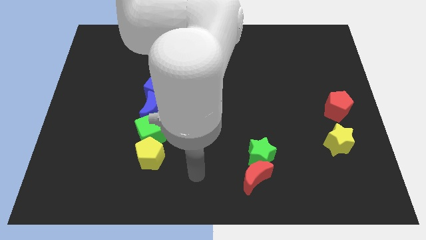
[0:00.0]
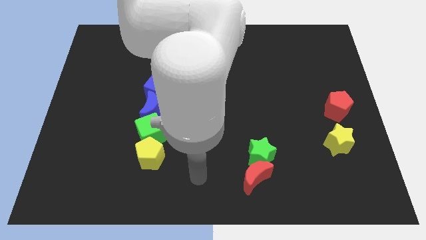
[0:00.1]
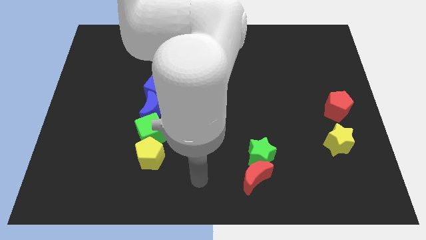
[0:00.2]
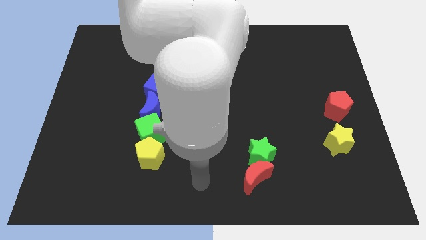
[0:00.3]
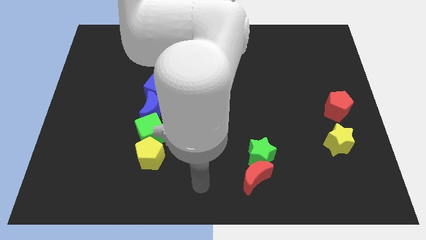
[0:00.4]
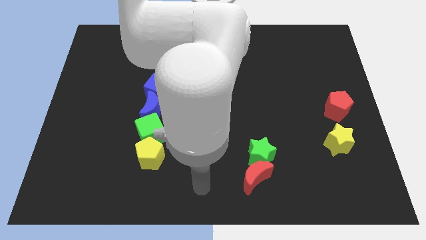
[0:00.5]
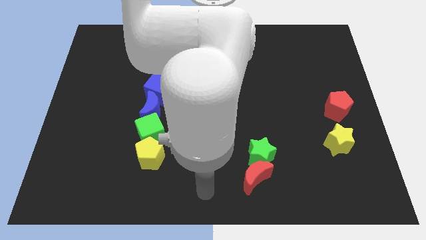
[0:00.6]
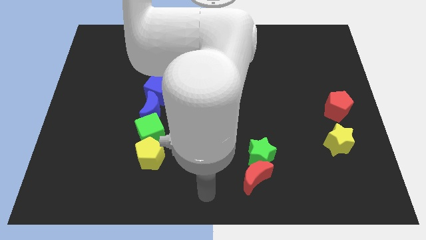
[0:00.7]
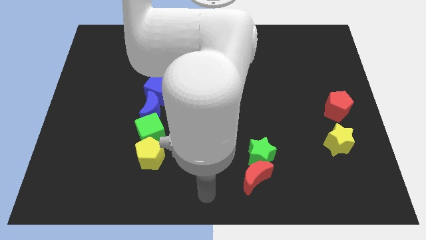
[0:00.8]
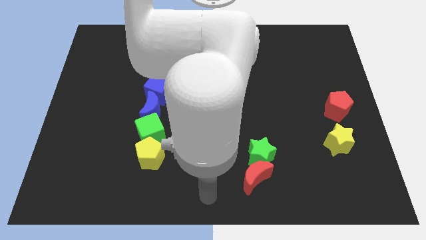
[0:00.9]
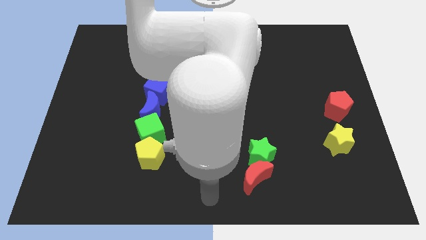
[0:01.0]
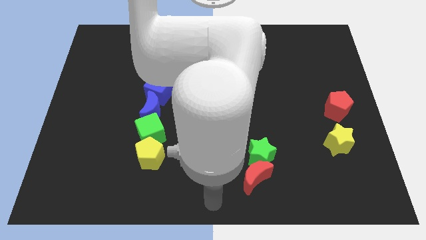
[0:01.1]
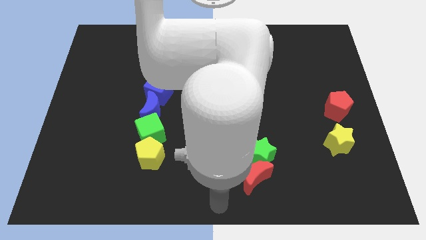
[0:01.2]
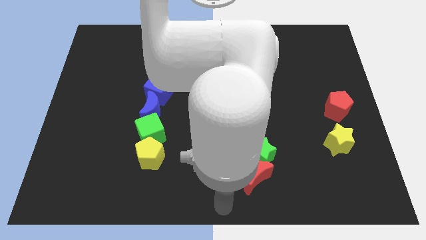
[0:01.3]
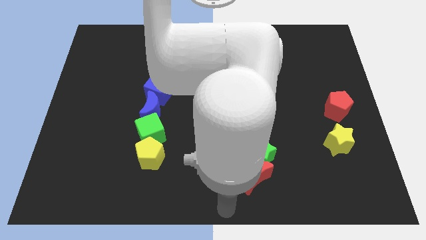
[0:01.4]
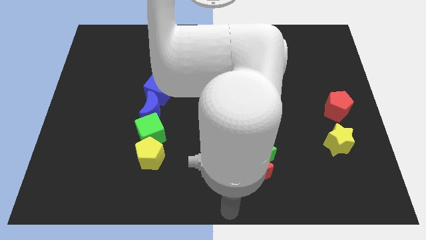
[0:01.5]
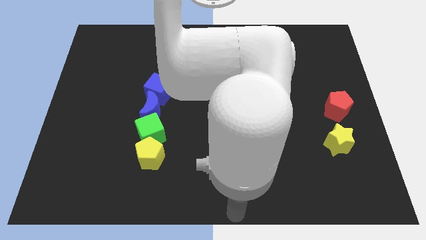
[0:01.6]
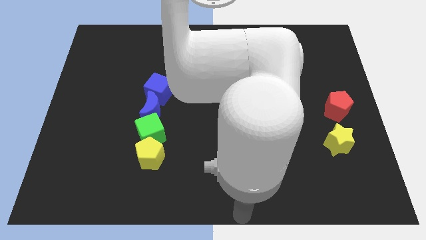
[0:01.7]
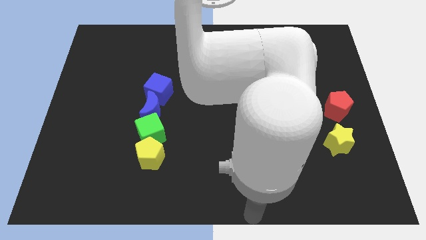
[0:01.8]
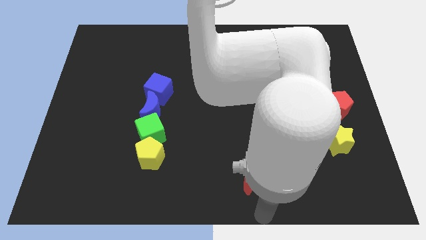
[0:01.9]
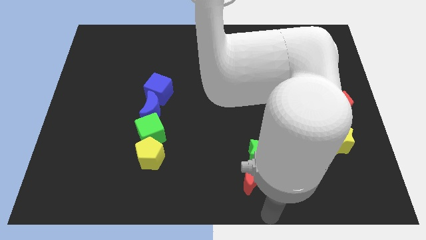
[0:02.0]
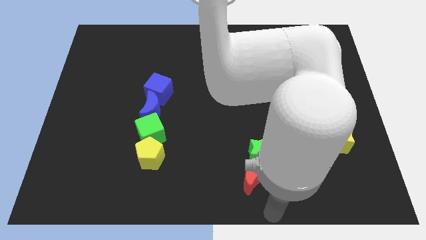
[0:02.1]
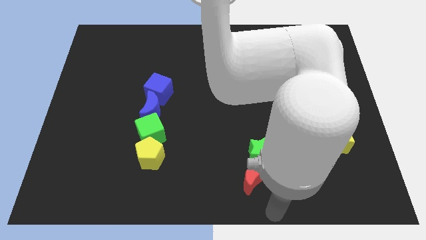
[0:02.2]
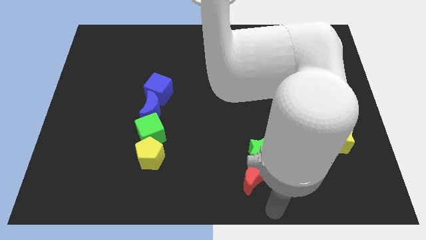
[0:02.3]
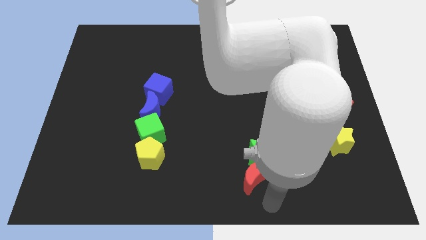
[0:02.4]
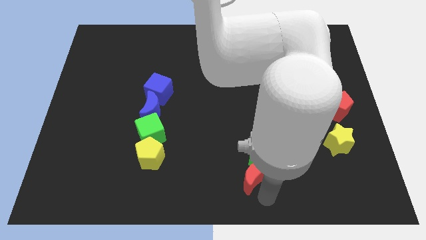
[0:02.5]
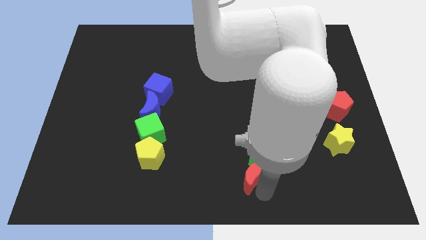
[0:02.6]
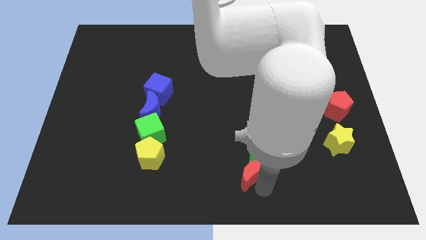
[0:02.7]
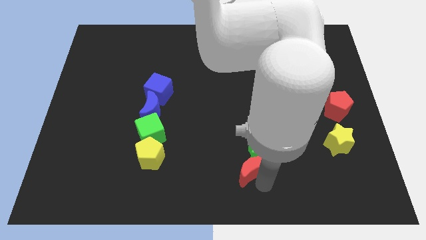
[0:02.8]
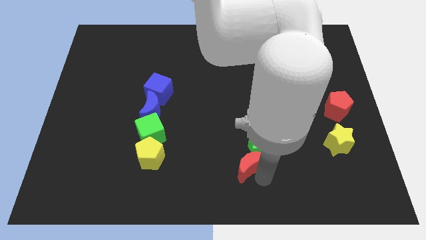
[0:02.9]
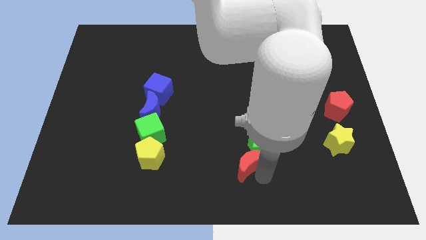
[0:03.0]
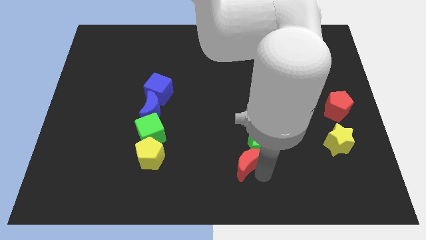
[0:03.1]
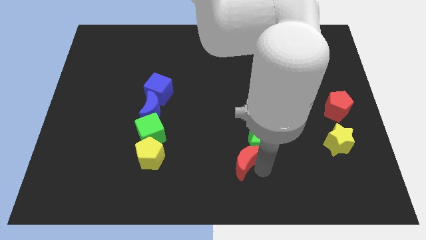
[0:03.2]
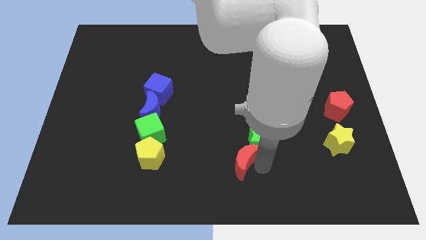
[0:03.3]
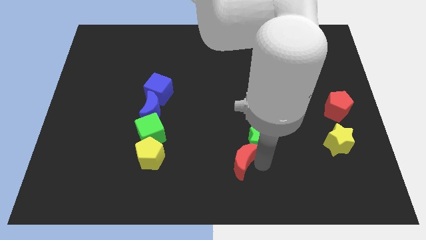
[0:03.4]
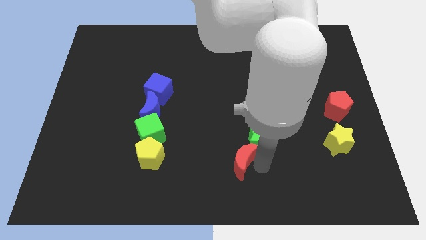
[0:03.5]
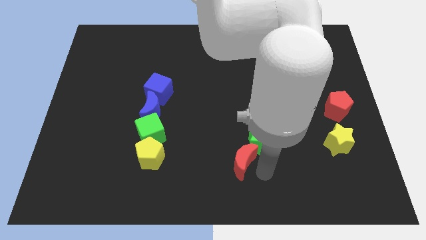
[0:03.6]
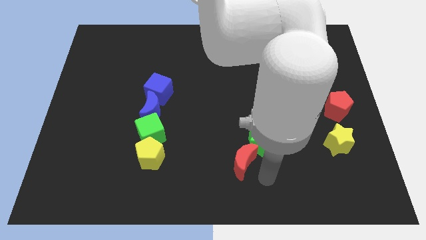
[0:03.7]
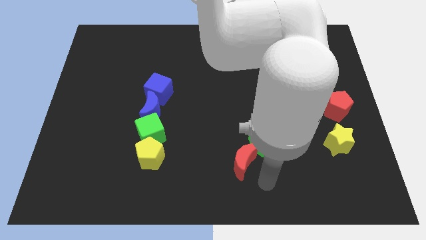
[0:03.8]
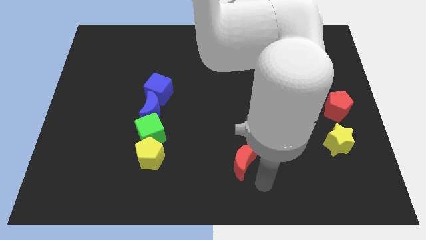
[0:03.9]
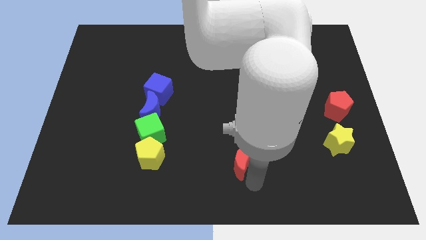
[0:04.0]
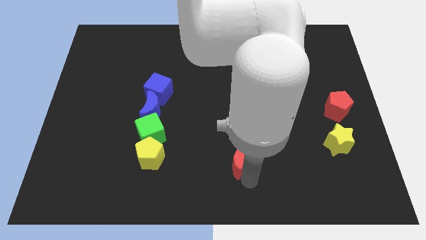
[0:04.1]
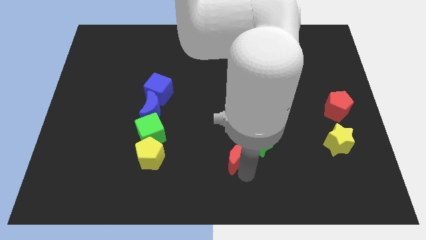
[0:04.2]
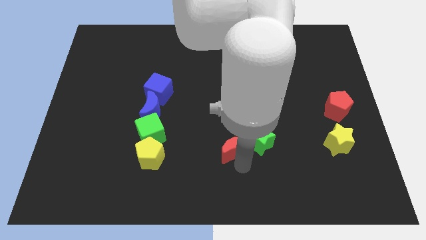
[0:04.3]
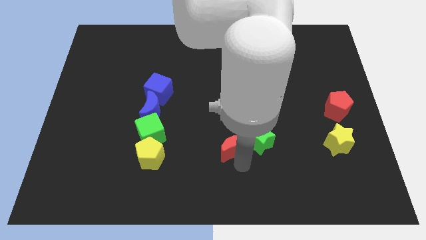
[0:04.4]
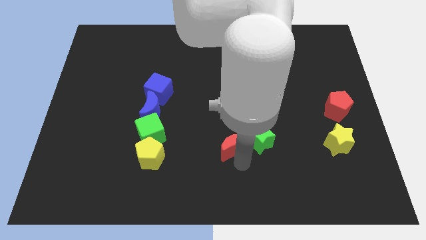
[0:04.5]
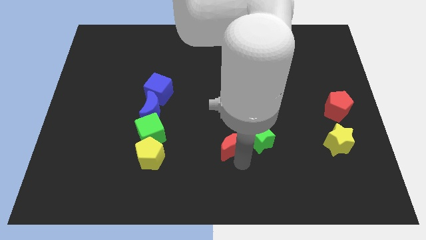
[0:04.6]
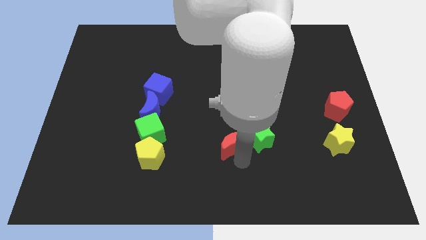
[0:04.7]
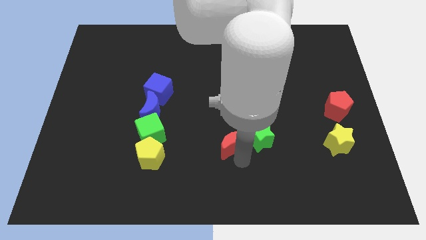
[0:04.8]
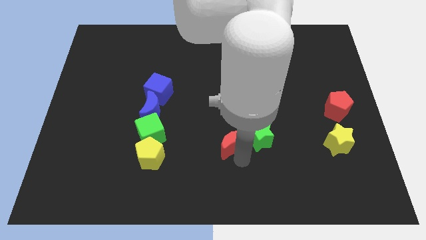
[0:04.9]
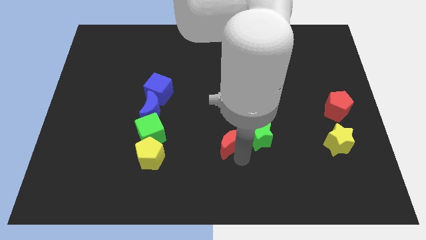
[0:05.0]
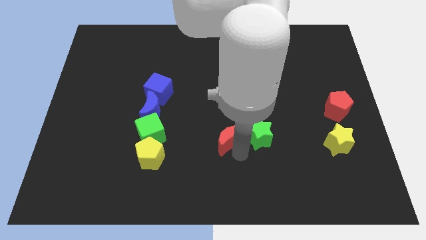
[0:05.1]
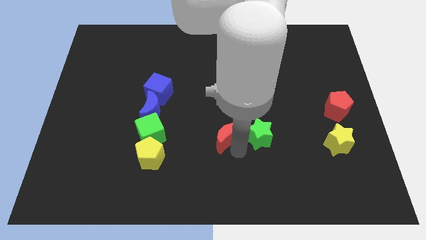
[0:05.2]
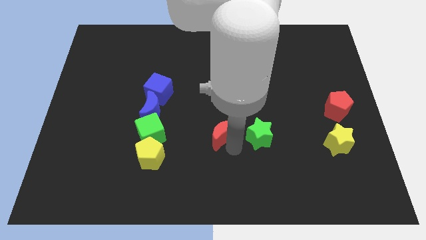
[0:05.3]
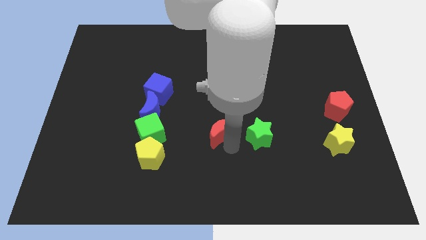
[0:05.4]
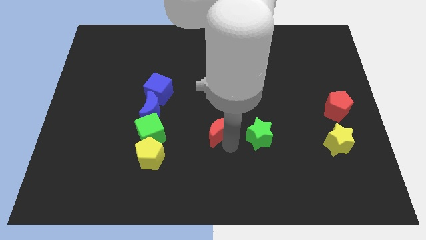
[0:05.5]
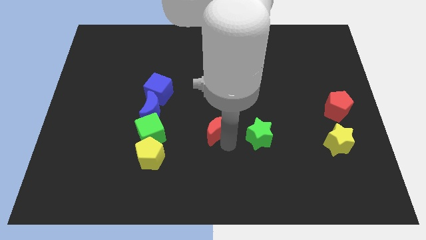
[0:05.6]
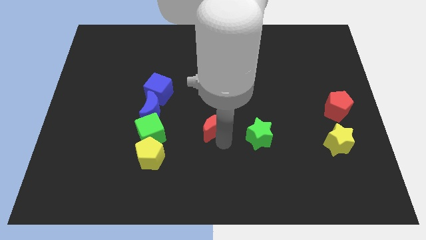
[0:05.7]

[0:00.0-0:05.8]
separate the red crescent and the green star

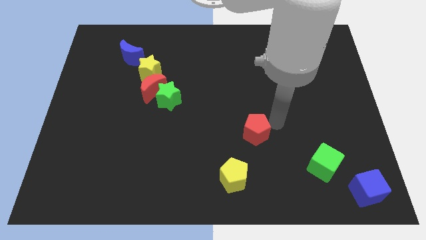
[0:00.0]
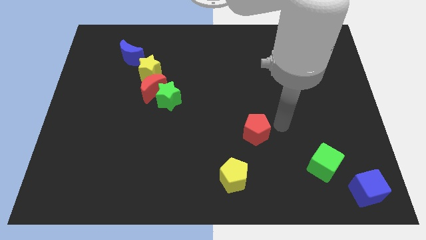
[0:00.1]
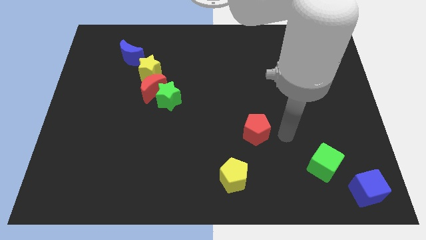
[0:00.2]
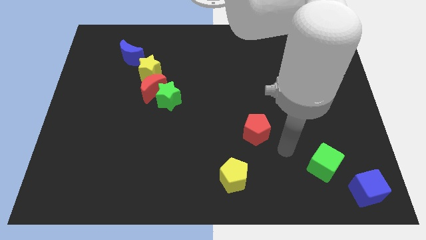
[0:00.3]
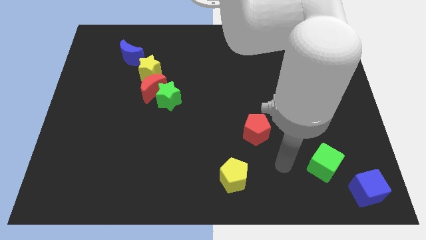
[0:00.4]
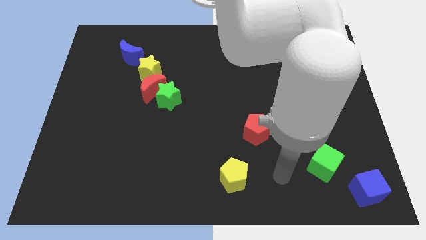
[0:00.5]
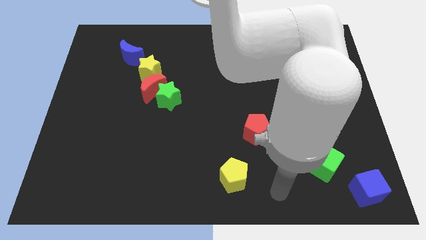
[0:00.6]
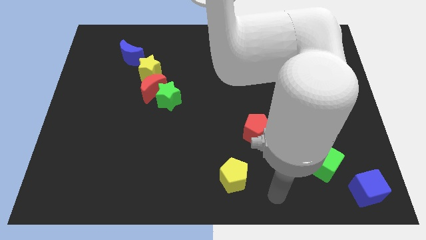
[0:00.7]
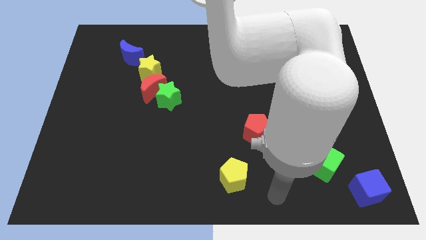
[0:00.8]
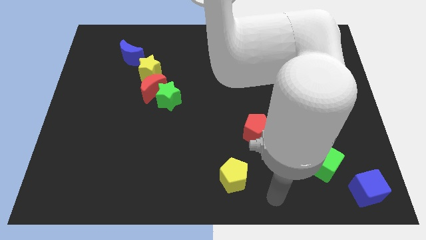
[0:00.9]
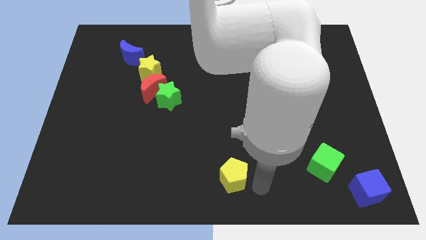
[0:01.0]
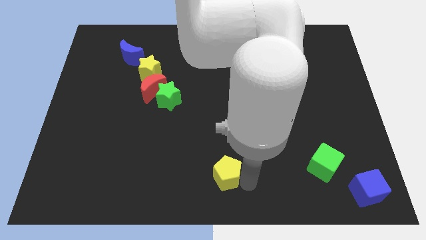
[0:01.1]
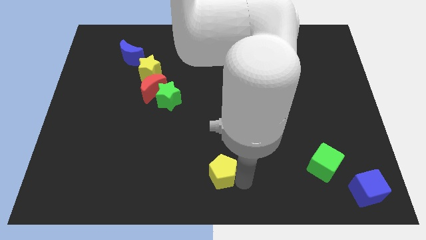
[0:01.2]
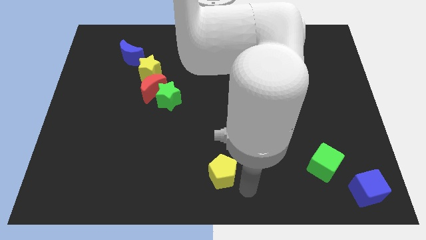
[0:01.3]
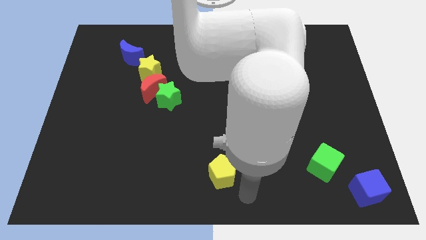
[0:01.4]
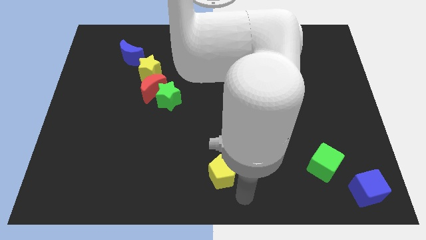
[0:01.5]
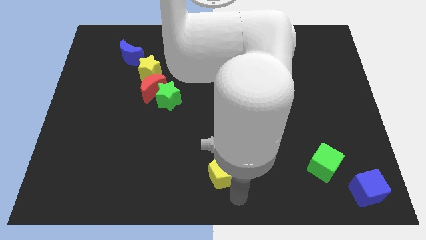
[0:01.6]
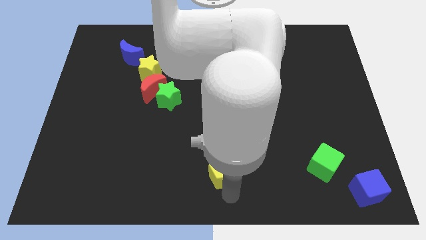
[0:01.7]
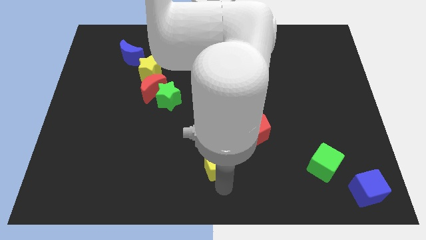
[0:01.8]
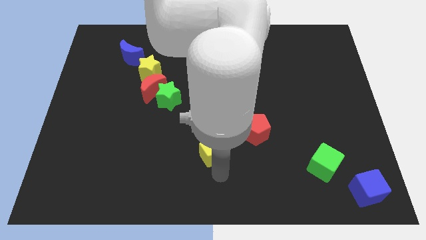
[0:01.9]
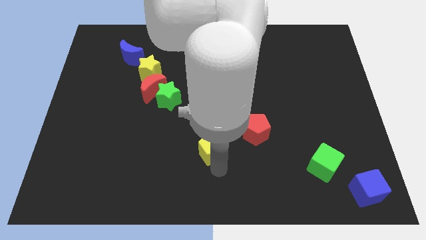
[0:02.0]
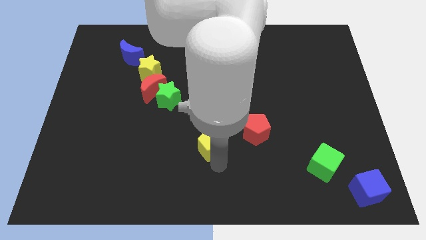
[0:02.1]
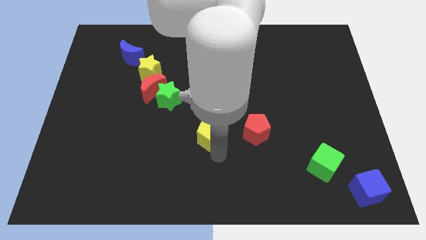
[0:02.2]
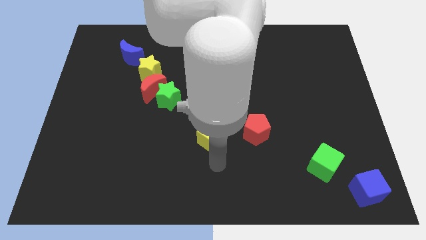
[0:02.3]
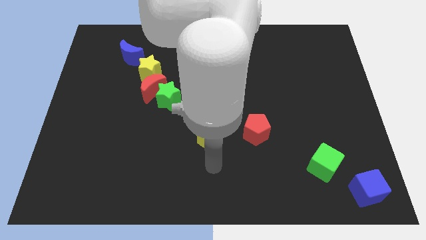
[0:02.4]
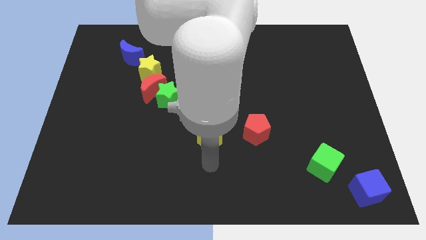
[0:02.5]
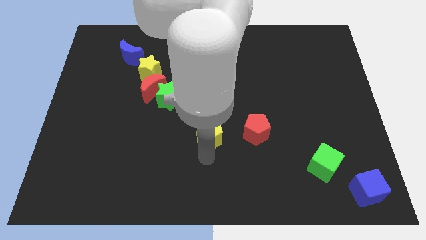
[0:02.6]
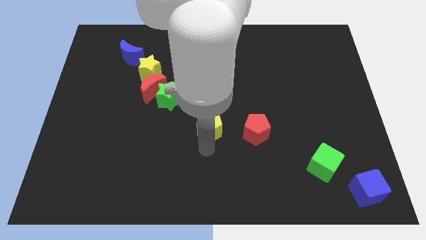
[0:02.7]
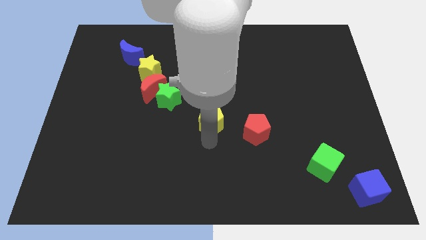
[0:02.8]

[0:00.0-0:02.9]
place the yellow pentagon left to the red pentagon

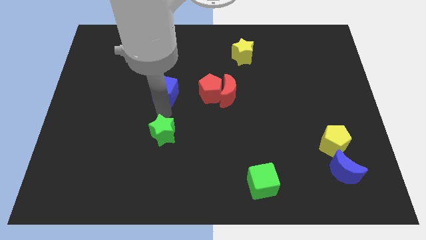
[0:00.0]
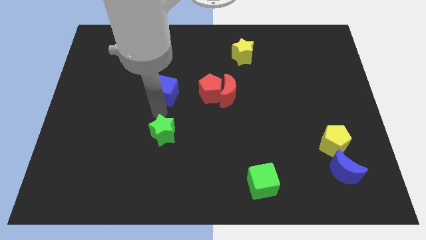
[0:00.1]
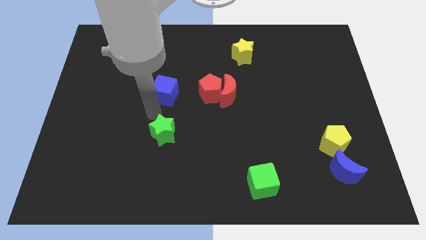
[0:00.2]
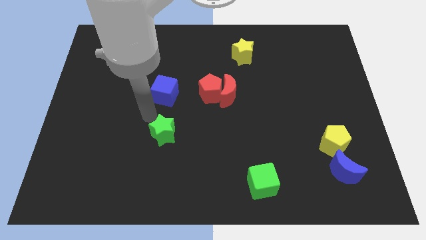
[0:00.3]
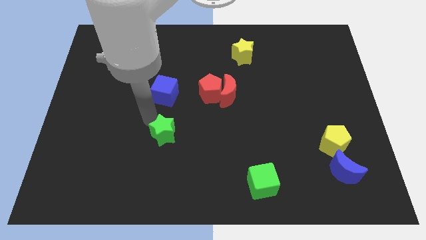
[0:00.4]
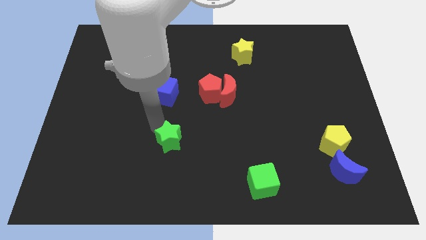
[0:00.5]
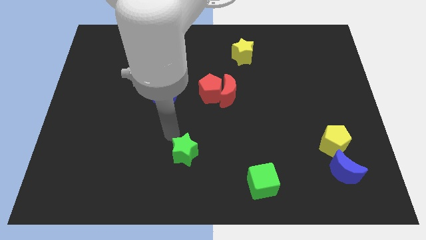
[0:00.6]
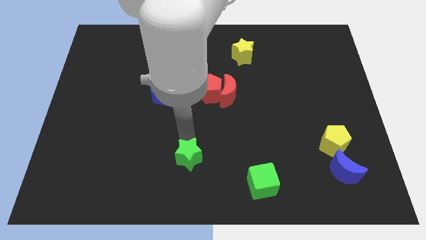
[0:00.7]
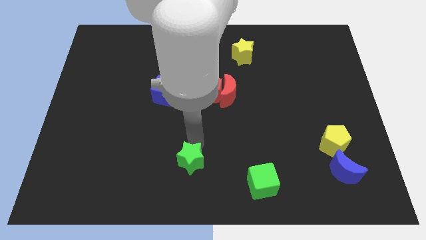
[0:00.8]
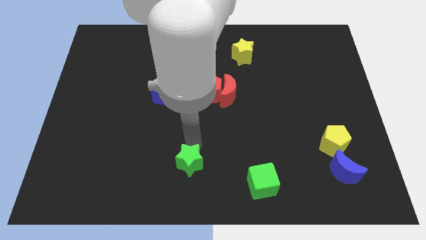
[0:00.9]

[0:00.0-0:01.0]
push the green star towards the bottom of the boar
